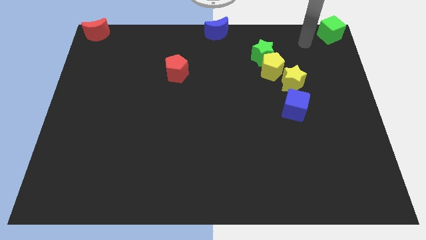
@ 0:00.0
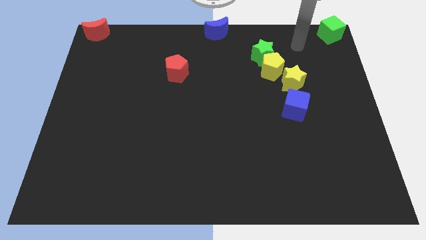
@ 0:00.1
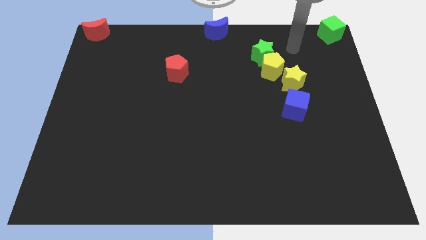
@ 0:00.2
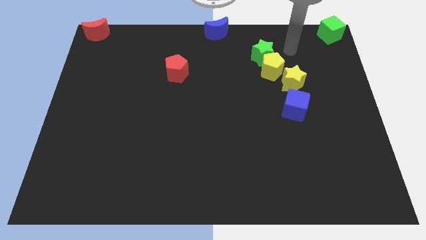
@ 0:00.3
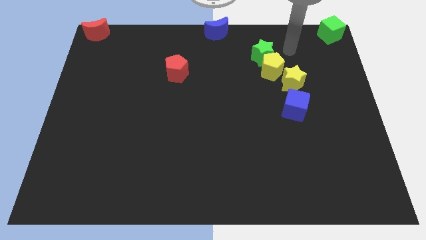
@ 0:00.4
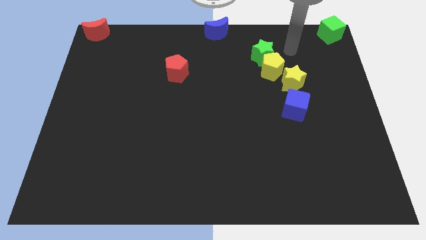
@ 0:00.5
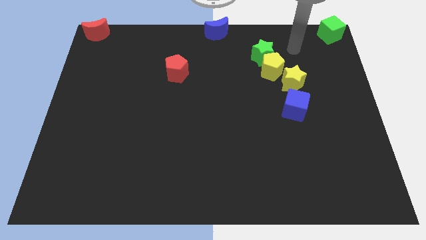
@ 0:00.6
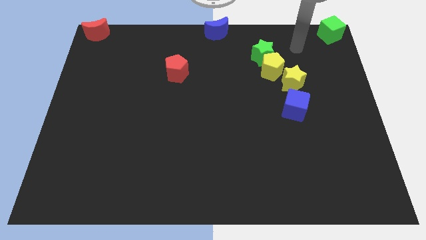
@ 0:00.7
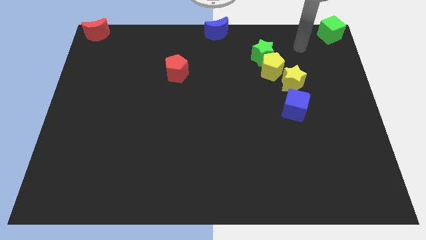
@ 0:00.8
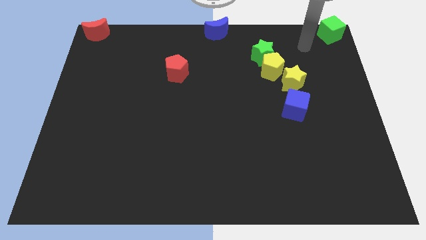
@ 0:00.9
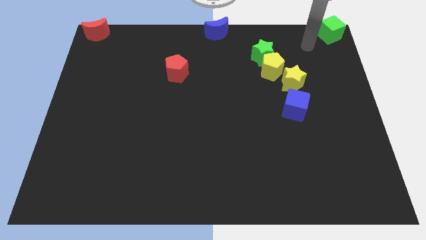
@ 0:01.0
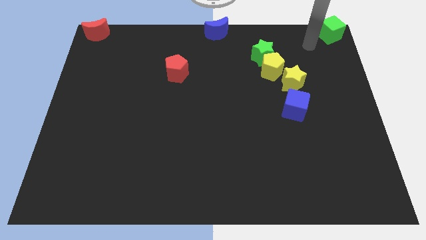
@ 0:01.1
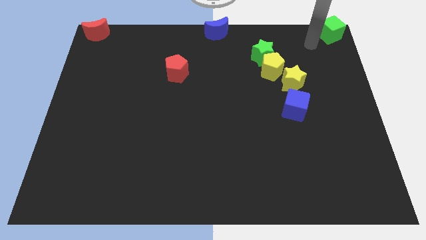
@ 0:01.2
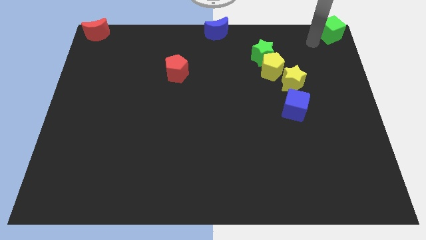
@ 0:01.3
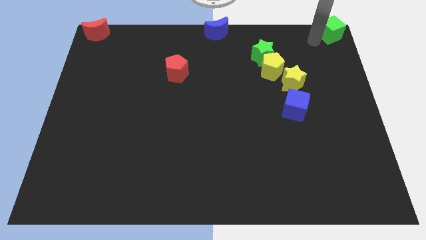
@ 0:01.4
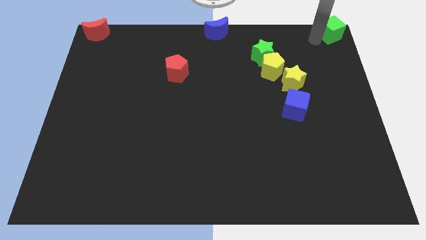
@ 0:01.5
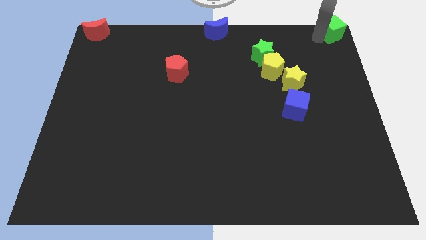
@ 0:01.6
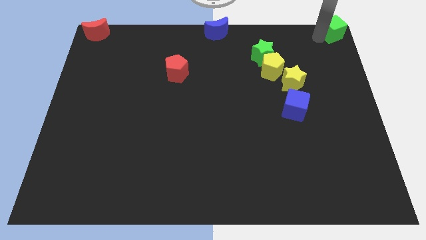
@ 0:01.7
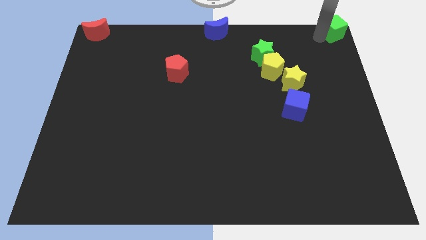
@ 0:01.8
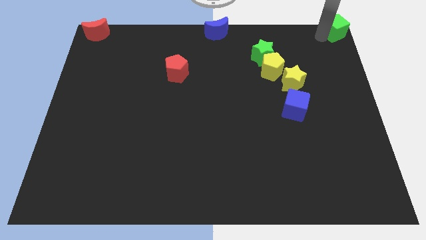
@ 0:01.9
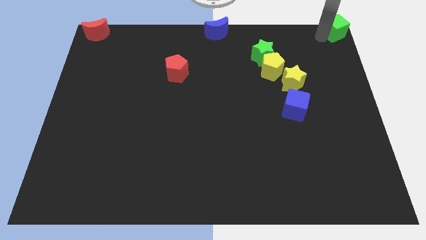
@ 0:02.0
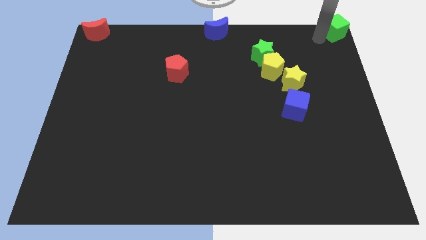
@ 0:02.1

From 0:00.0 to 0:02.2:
slide the green cube to the top right corner of the table

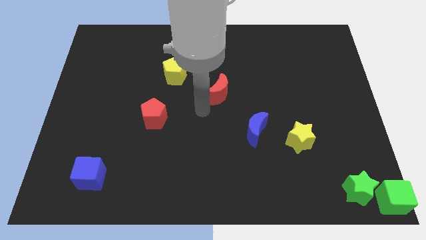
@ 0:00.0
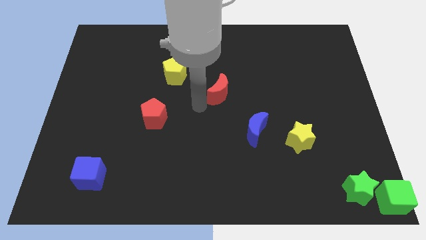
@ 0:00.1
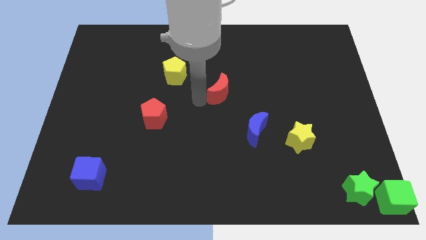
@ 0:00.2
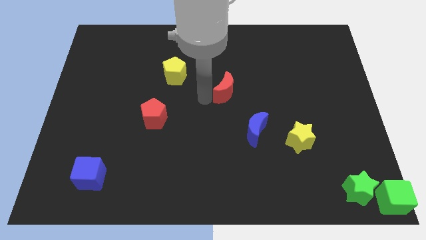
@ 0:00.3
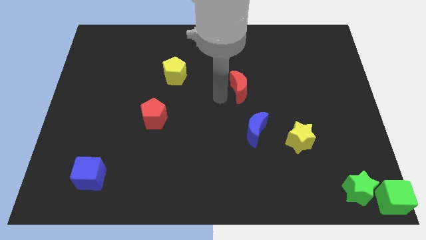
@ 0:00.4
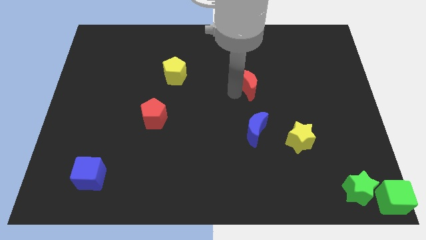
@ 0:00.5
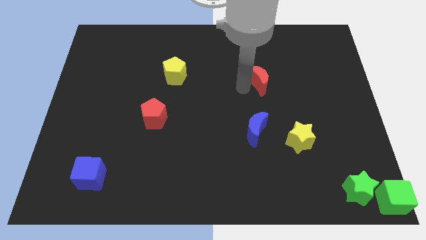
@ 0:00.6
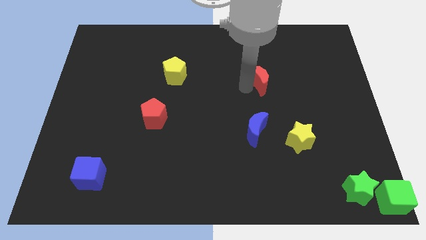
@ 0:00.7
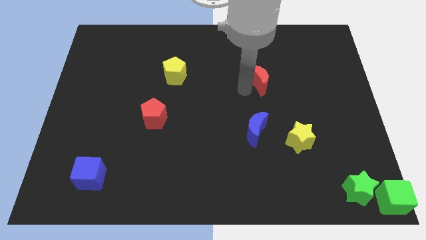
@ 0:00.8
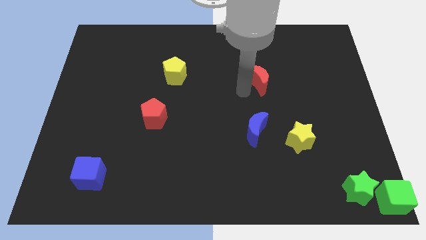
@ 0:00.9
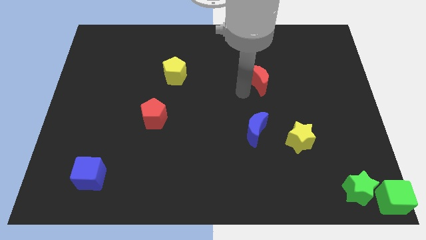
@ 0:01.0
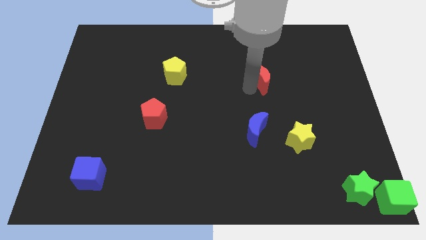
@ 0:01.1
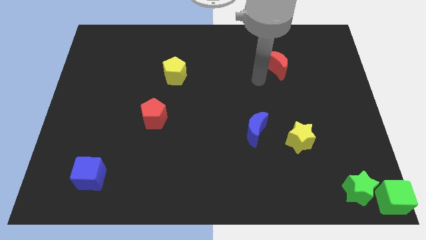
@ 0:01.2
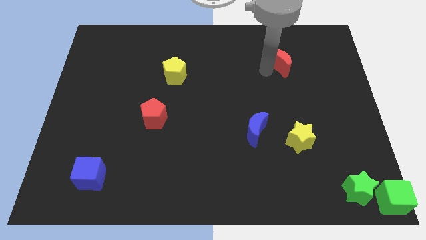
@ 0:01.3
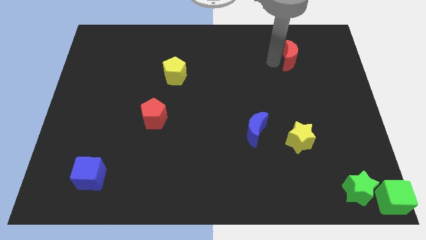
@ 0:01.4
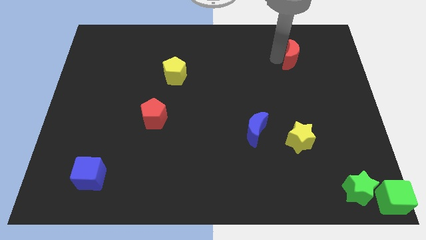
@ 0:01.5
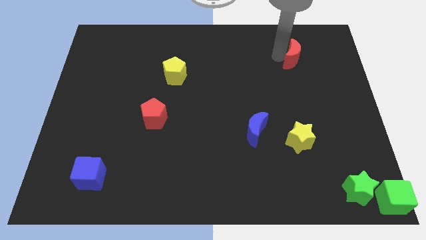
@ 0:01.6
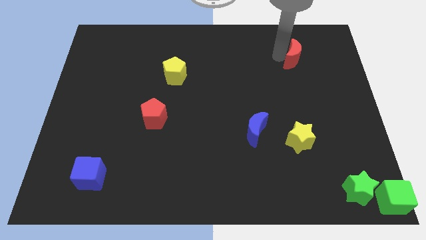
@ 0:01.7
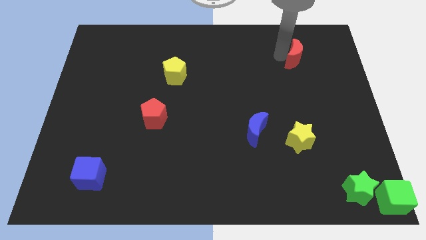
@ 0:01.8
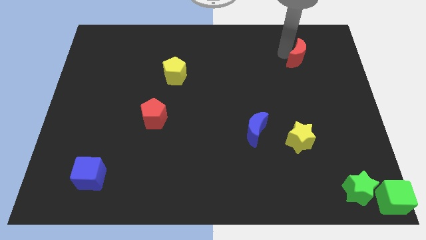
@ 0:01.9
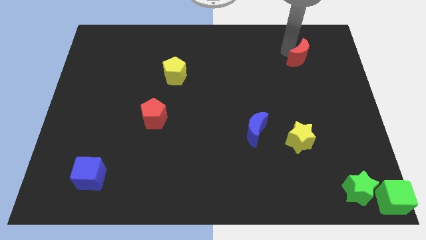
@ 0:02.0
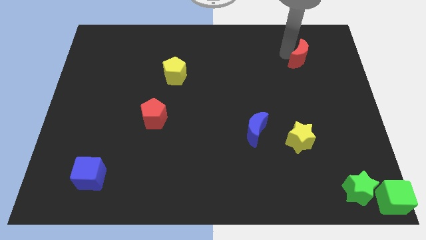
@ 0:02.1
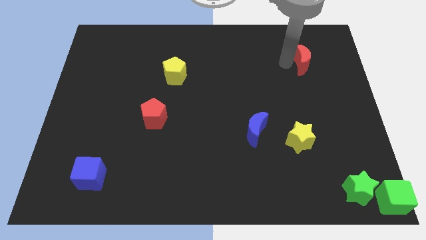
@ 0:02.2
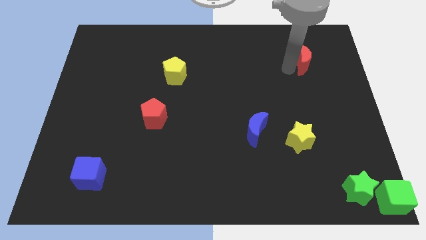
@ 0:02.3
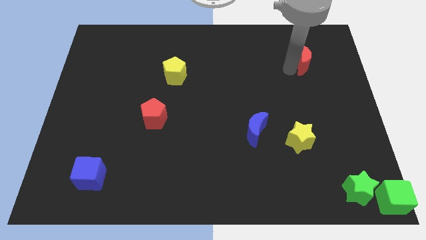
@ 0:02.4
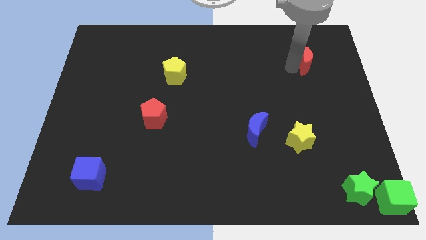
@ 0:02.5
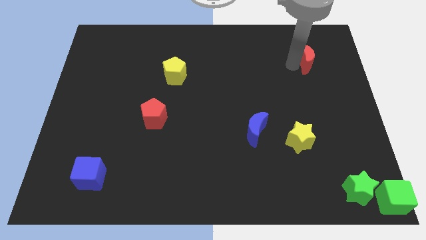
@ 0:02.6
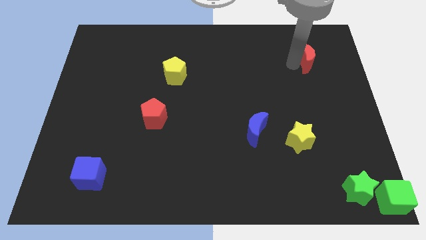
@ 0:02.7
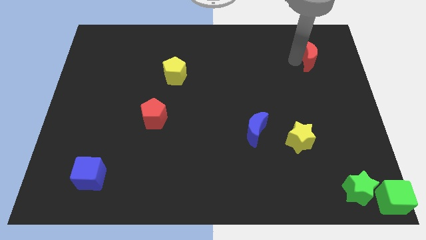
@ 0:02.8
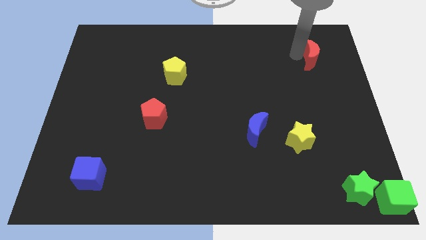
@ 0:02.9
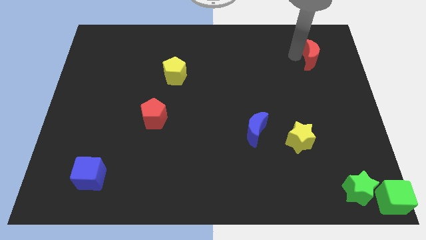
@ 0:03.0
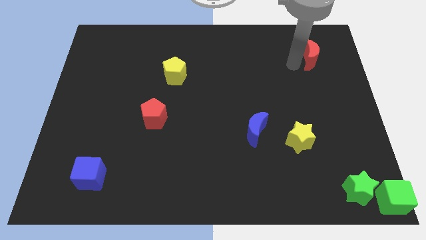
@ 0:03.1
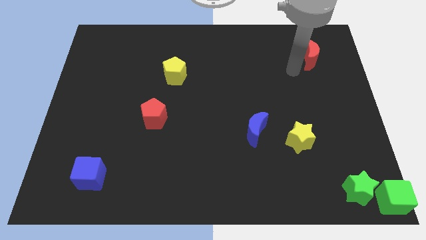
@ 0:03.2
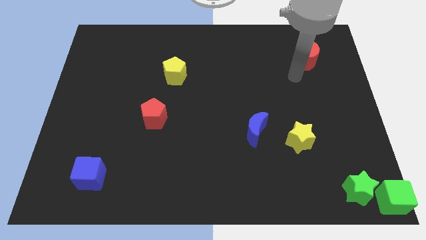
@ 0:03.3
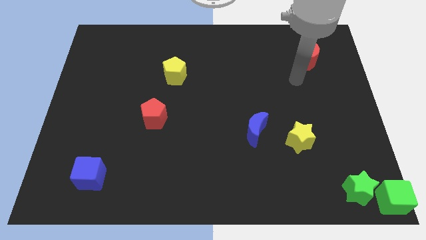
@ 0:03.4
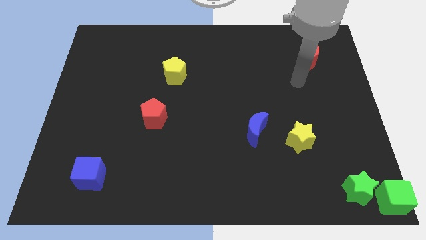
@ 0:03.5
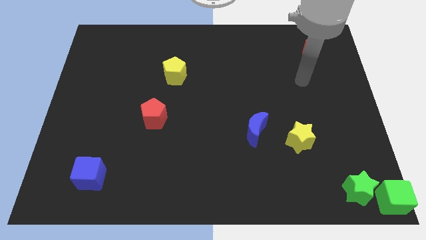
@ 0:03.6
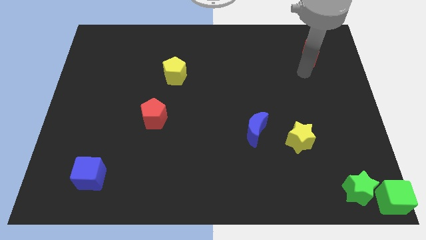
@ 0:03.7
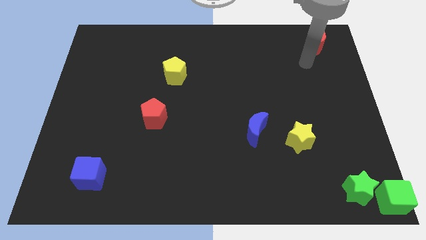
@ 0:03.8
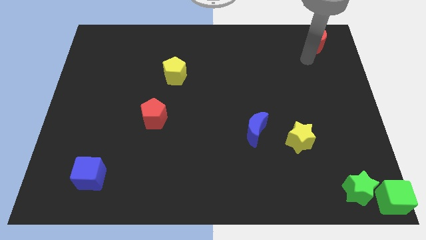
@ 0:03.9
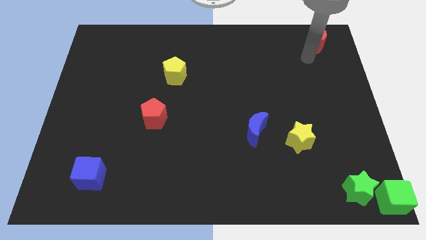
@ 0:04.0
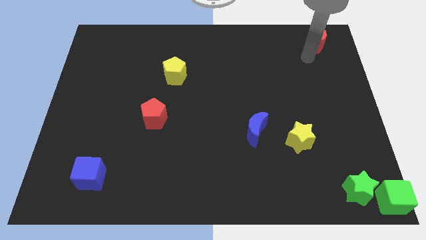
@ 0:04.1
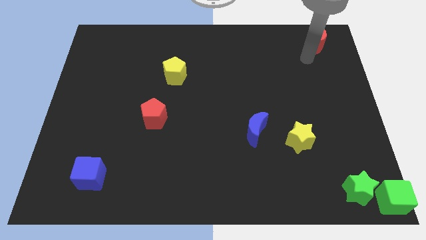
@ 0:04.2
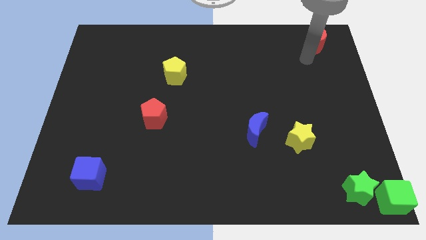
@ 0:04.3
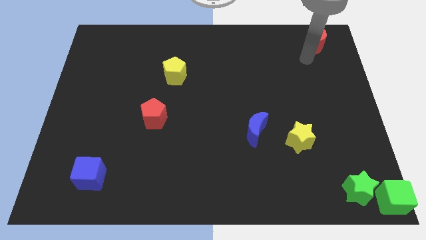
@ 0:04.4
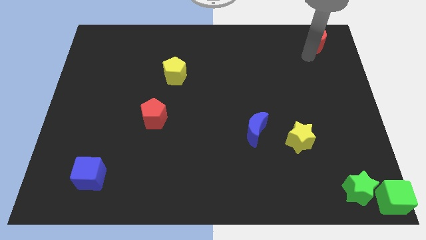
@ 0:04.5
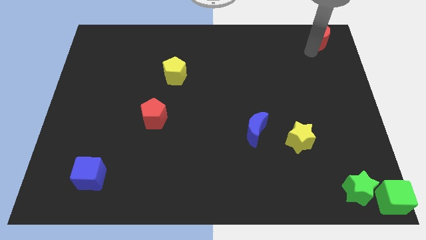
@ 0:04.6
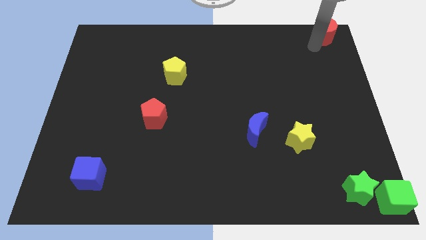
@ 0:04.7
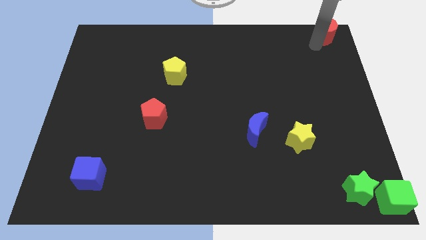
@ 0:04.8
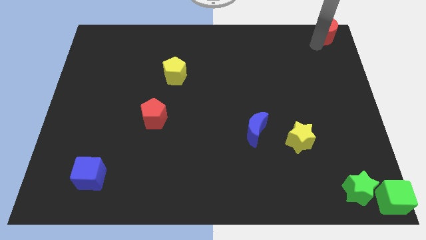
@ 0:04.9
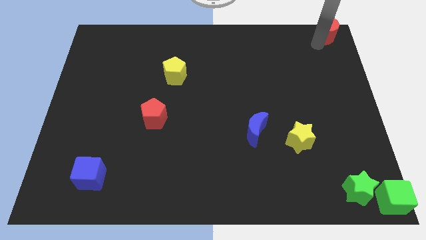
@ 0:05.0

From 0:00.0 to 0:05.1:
drag red moon towards top right side of the board

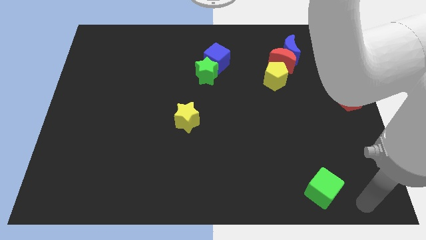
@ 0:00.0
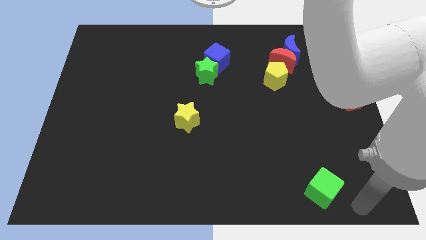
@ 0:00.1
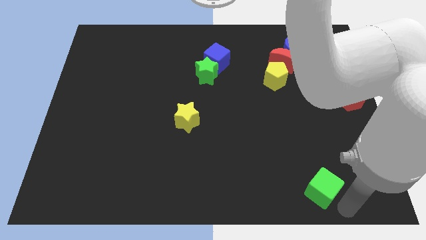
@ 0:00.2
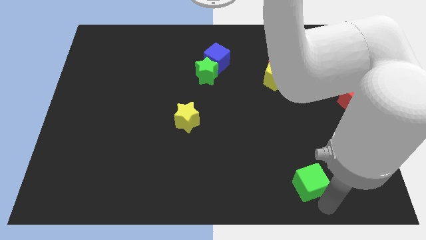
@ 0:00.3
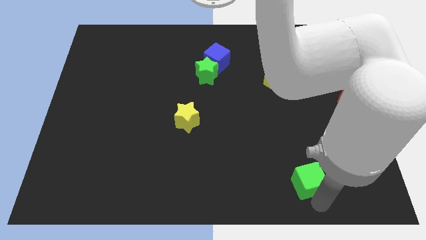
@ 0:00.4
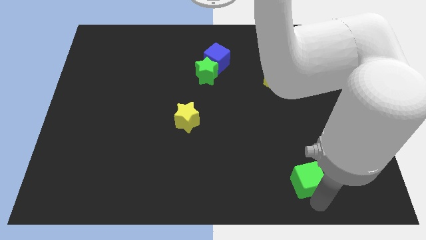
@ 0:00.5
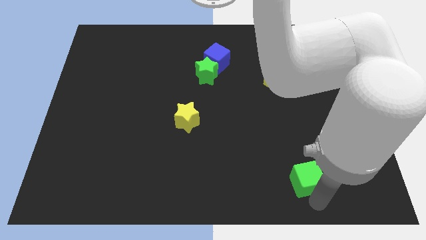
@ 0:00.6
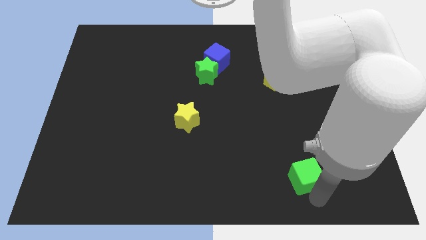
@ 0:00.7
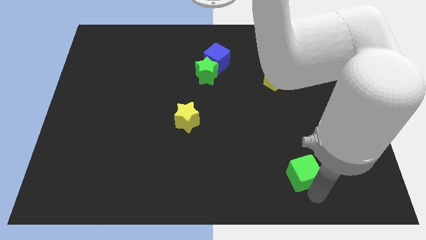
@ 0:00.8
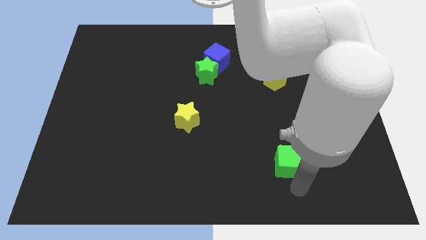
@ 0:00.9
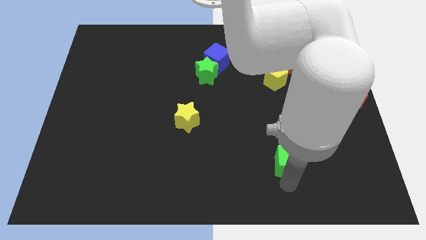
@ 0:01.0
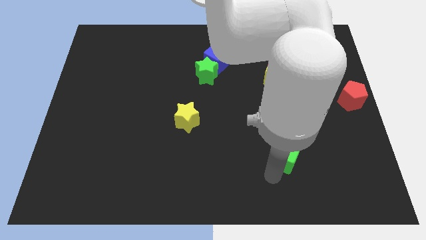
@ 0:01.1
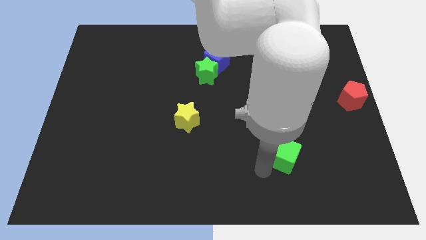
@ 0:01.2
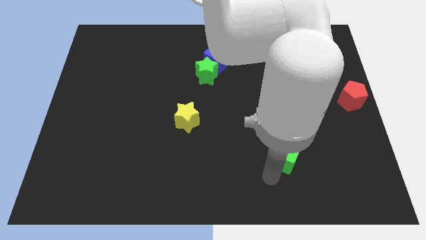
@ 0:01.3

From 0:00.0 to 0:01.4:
push green cube slightly to top side of the board

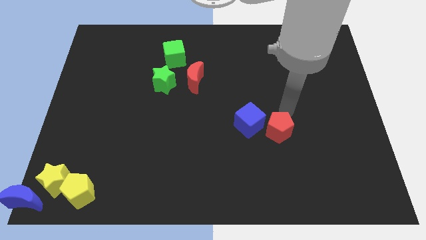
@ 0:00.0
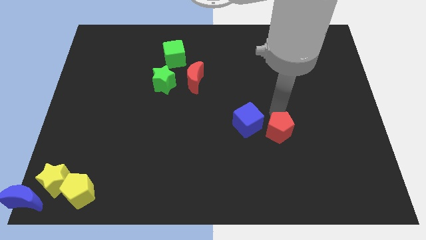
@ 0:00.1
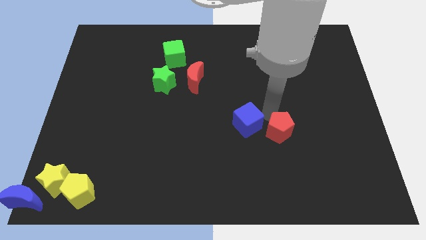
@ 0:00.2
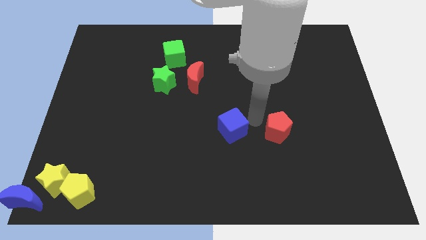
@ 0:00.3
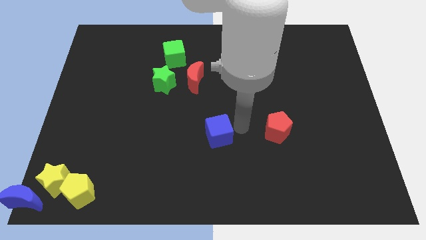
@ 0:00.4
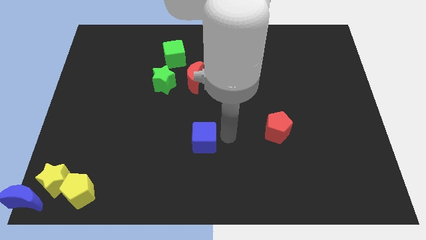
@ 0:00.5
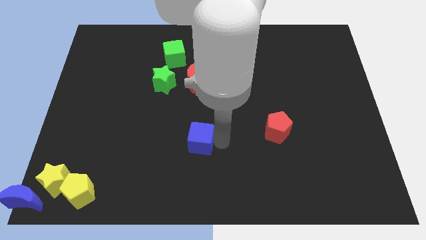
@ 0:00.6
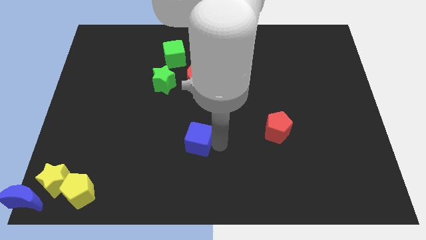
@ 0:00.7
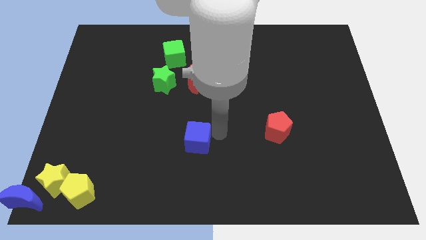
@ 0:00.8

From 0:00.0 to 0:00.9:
move blue cube slightly to left
